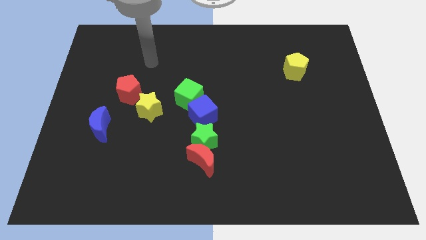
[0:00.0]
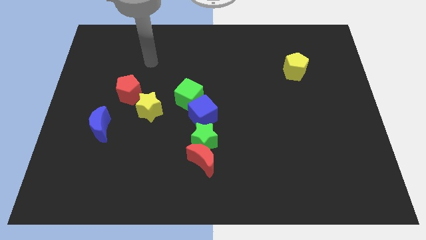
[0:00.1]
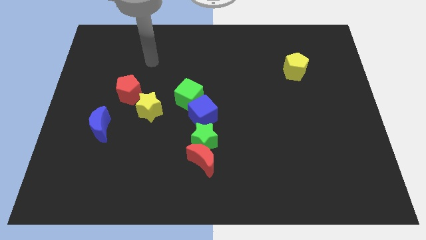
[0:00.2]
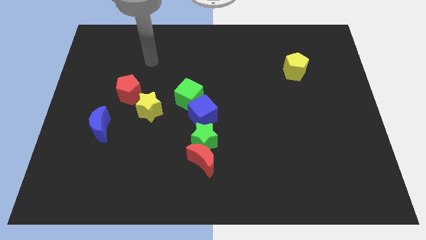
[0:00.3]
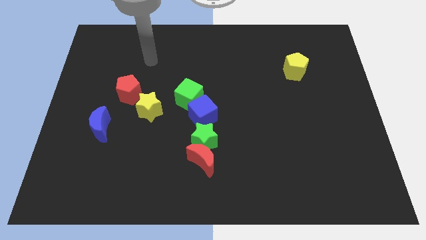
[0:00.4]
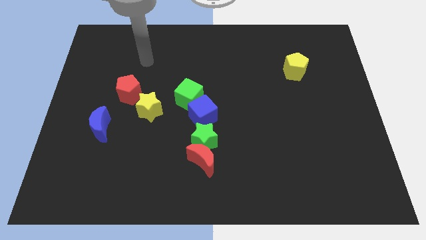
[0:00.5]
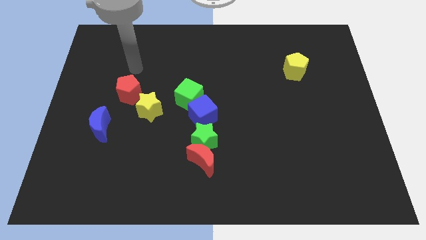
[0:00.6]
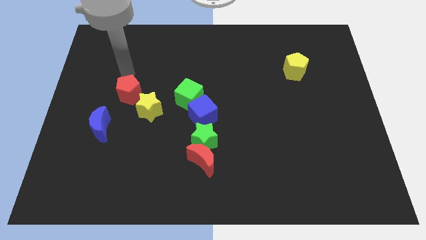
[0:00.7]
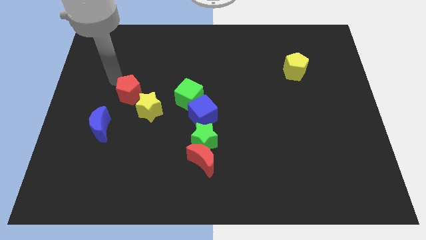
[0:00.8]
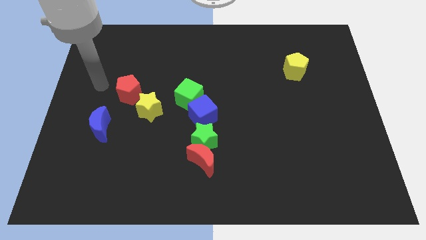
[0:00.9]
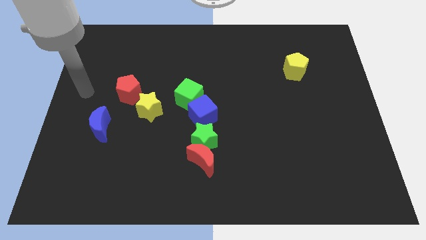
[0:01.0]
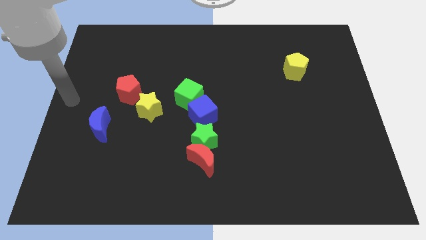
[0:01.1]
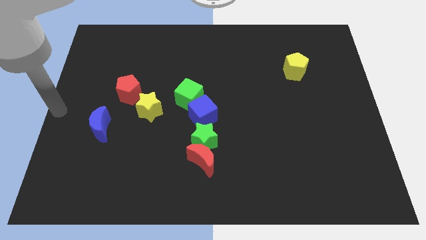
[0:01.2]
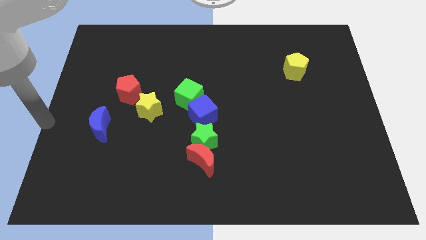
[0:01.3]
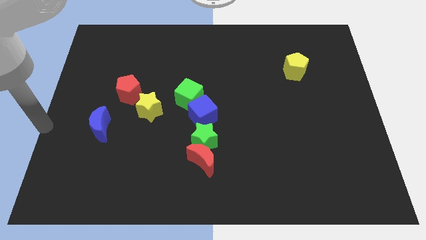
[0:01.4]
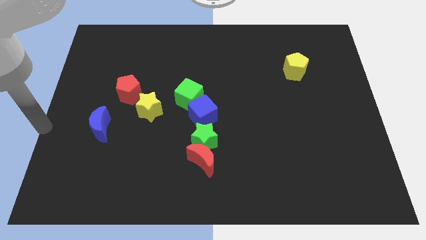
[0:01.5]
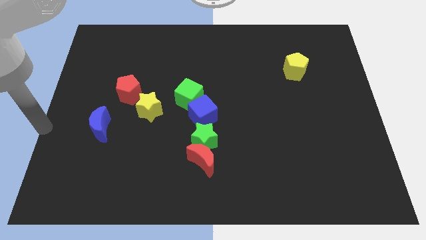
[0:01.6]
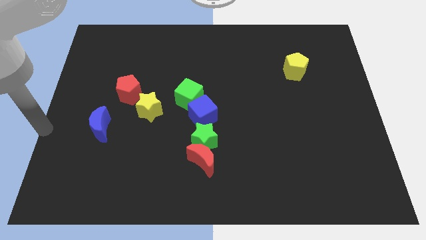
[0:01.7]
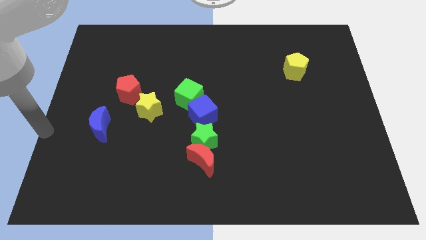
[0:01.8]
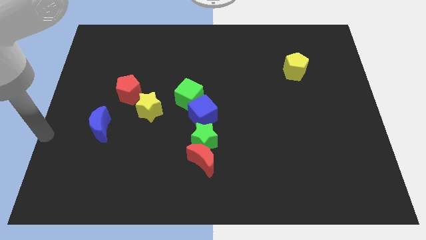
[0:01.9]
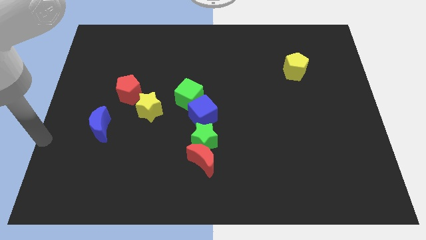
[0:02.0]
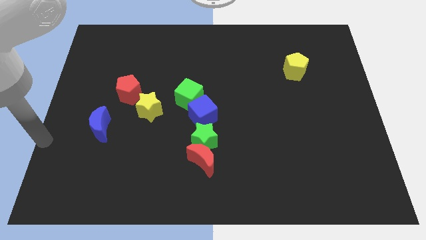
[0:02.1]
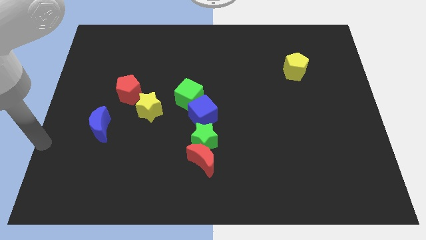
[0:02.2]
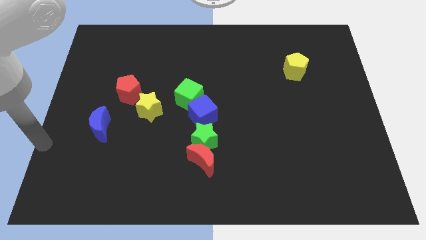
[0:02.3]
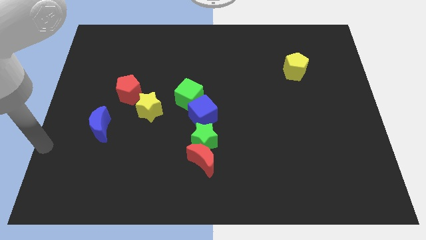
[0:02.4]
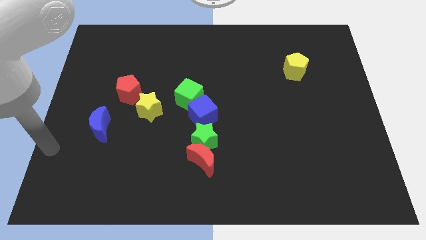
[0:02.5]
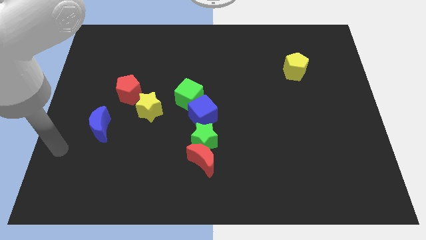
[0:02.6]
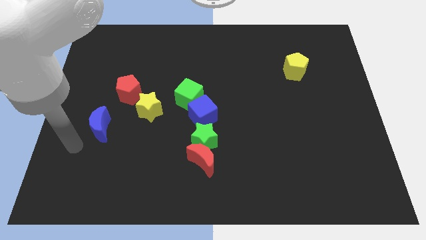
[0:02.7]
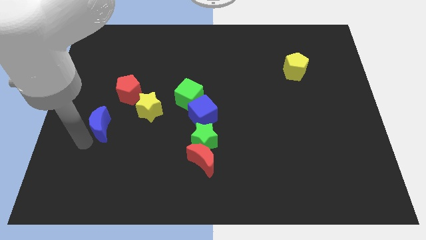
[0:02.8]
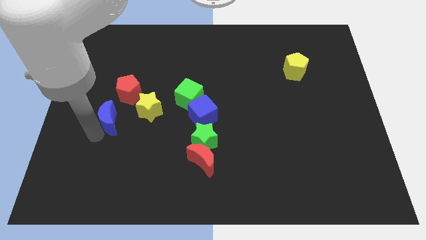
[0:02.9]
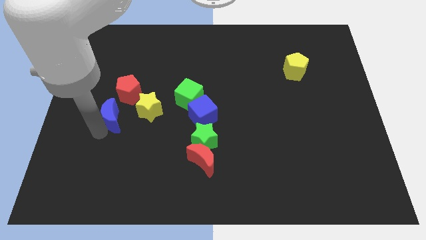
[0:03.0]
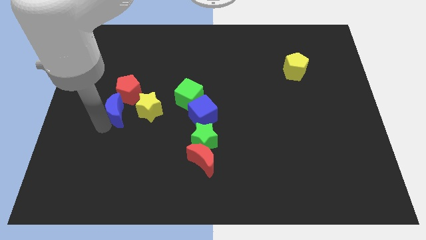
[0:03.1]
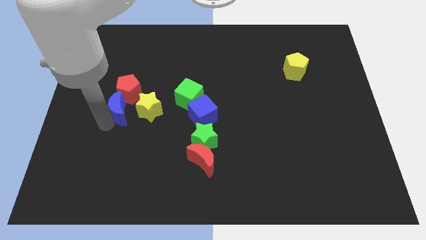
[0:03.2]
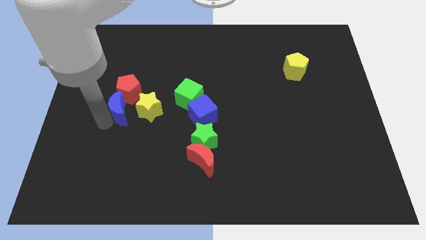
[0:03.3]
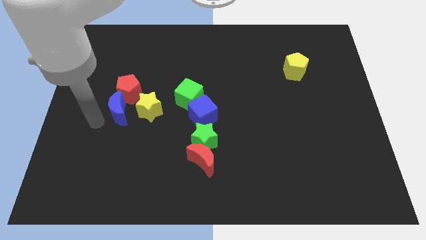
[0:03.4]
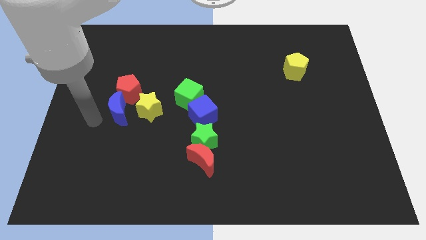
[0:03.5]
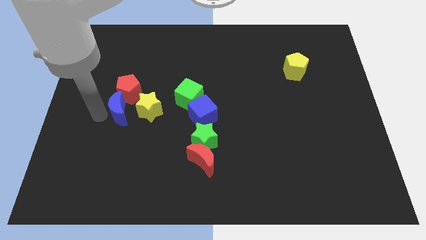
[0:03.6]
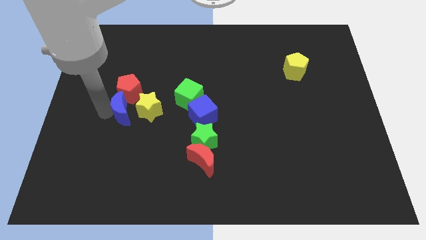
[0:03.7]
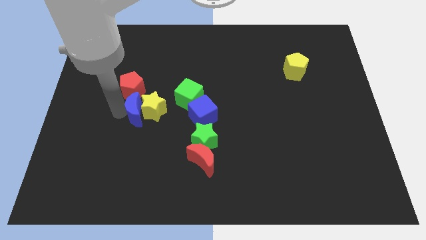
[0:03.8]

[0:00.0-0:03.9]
move the blue crescent to the yellow star

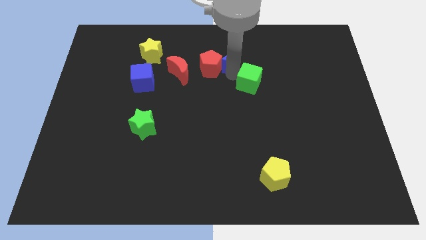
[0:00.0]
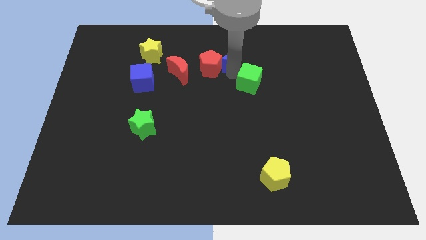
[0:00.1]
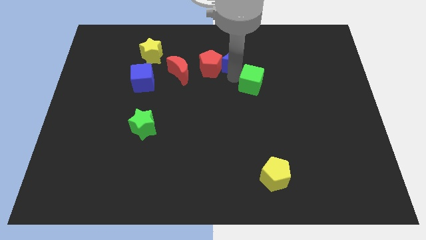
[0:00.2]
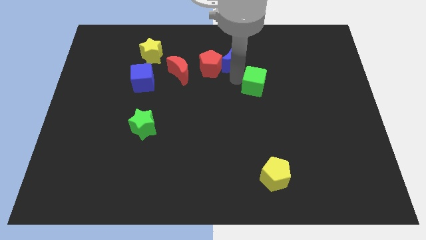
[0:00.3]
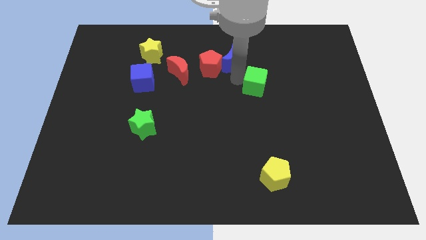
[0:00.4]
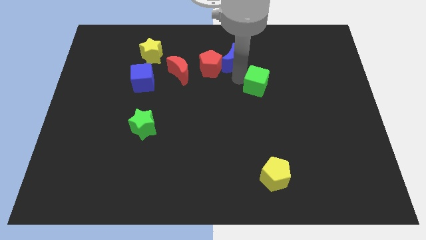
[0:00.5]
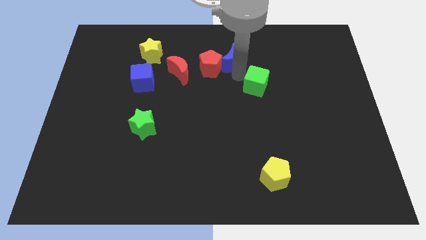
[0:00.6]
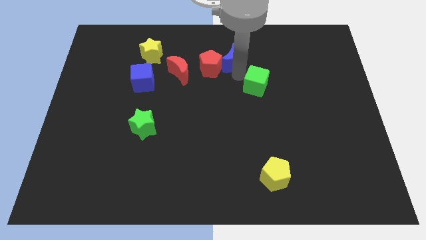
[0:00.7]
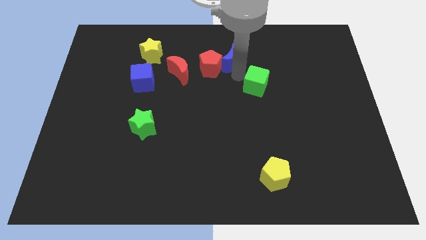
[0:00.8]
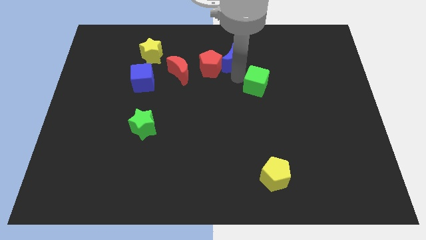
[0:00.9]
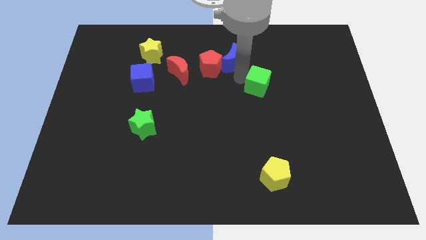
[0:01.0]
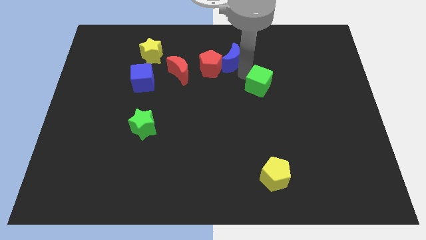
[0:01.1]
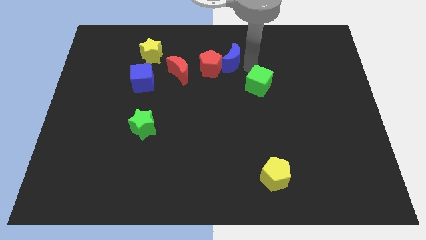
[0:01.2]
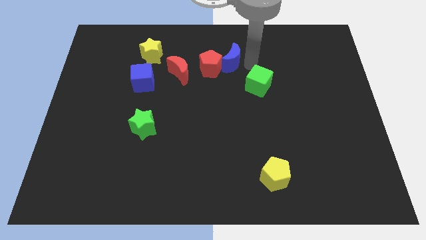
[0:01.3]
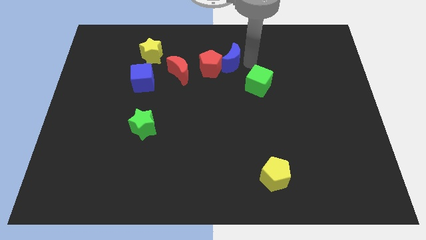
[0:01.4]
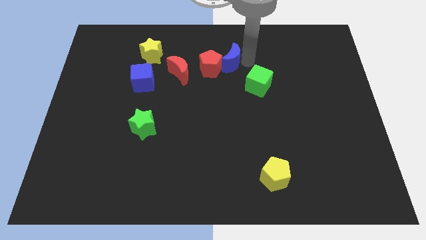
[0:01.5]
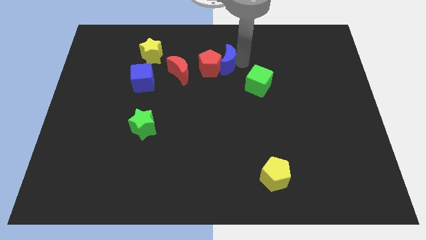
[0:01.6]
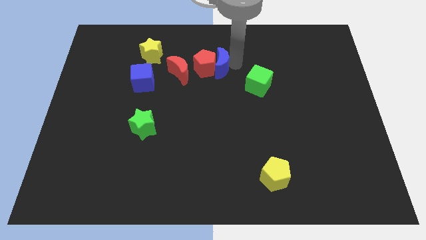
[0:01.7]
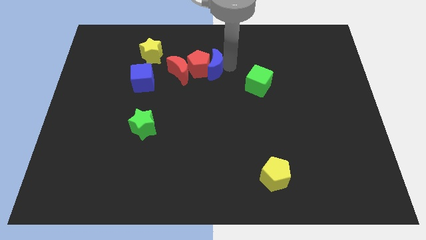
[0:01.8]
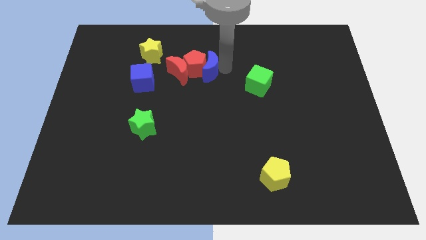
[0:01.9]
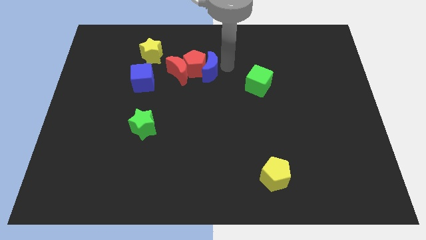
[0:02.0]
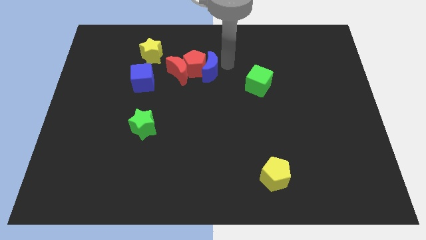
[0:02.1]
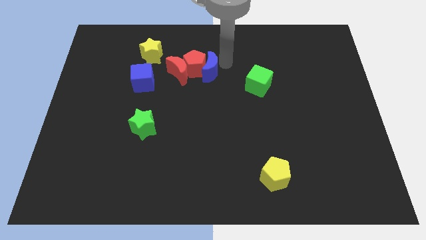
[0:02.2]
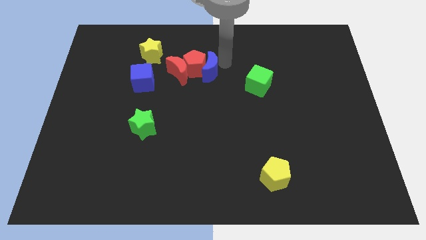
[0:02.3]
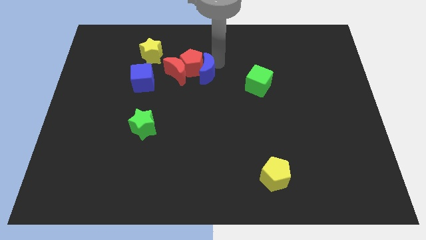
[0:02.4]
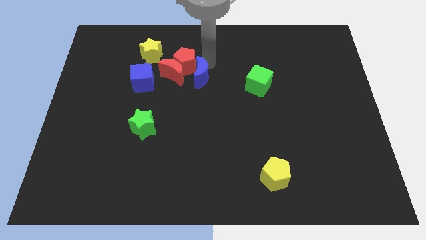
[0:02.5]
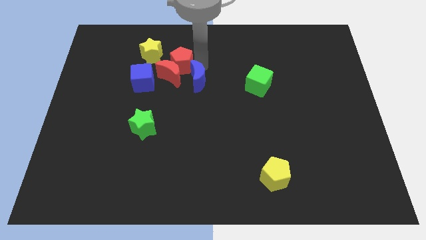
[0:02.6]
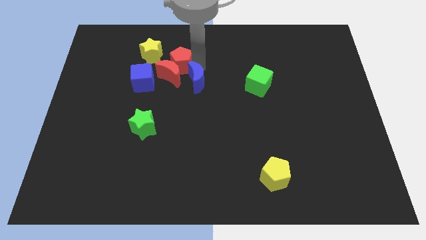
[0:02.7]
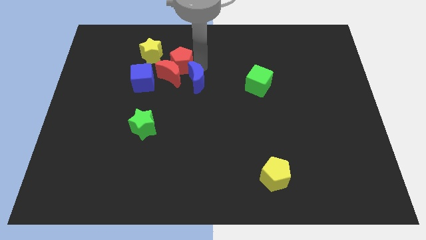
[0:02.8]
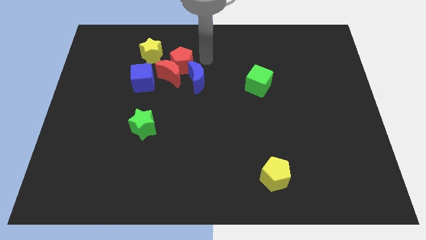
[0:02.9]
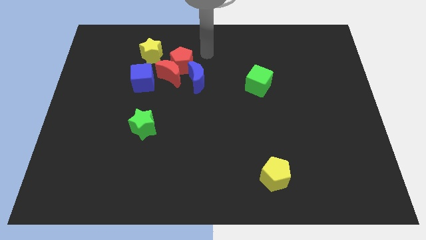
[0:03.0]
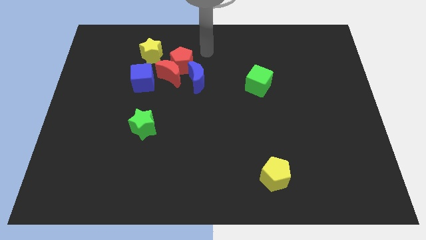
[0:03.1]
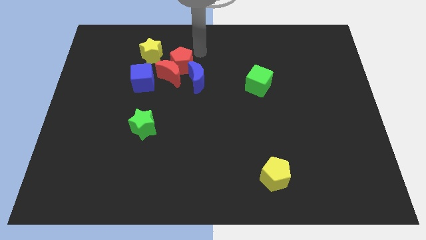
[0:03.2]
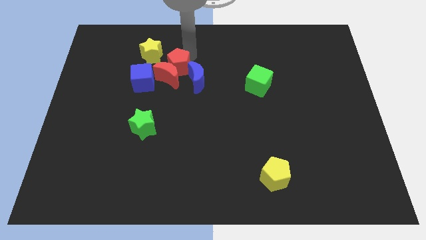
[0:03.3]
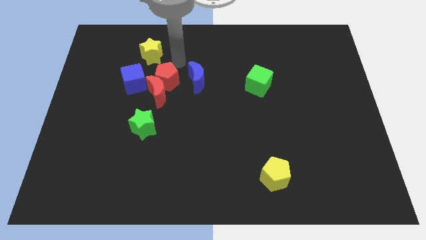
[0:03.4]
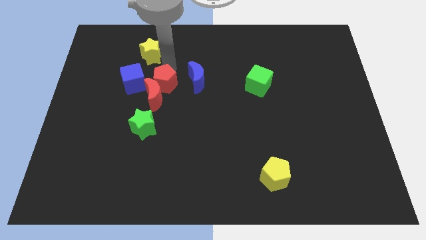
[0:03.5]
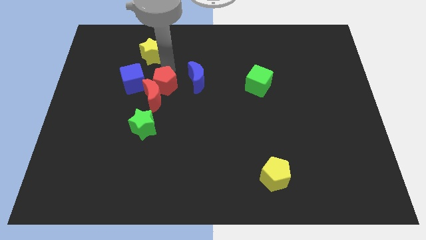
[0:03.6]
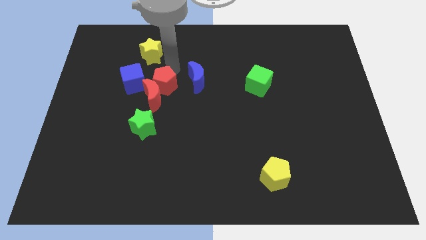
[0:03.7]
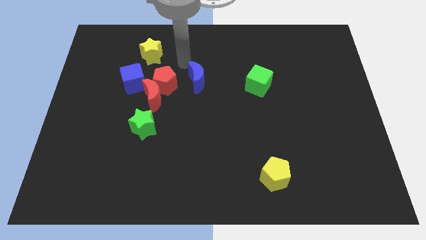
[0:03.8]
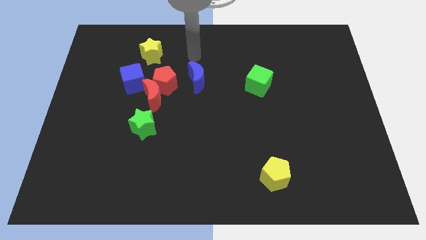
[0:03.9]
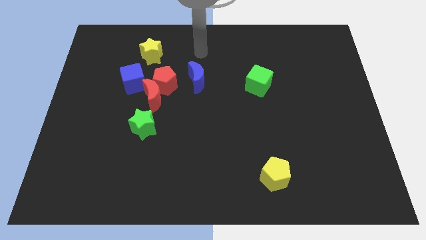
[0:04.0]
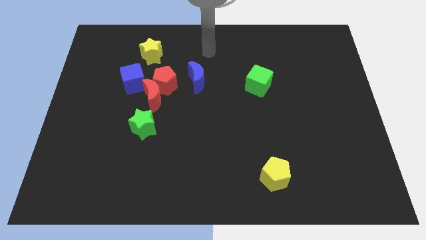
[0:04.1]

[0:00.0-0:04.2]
separate the blue moon and red pentagon

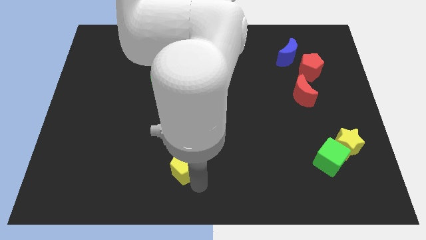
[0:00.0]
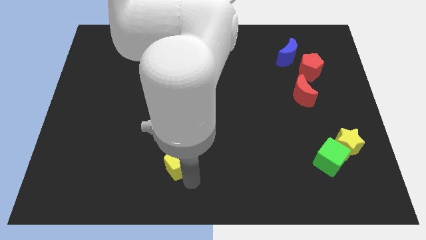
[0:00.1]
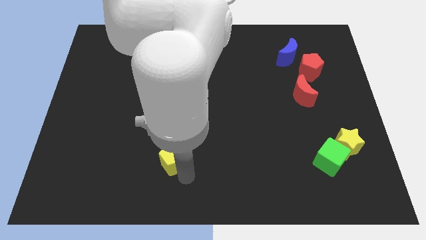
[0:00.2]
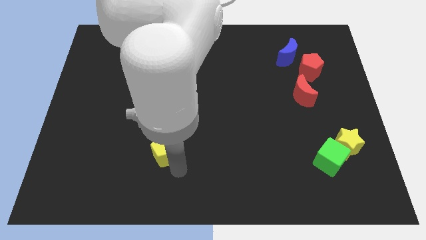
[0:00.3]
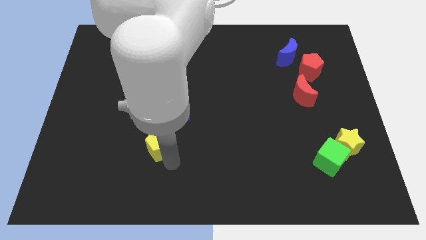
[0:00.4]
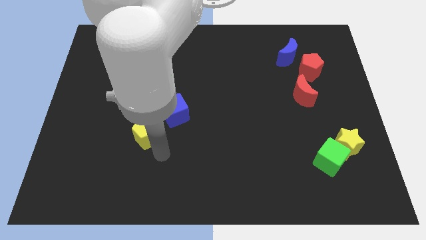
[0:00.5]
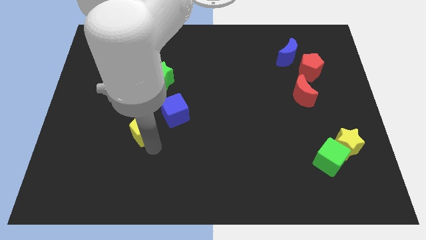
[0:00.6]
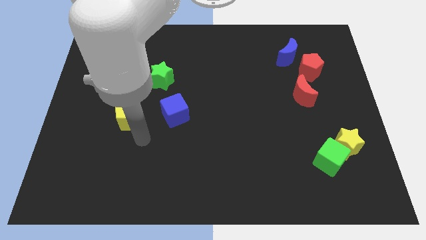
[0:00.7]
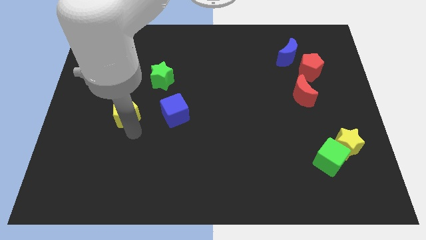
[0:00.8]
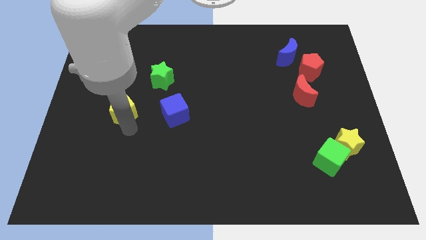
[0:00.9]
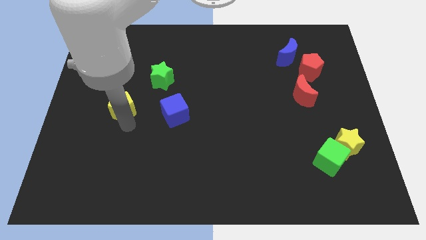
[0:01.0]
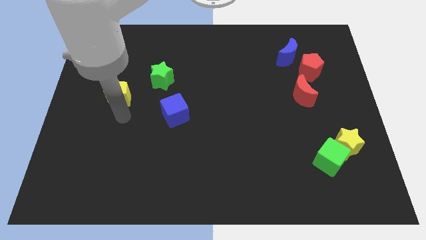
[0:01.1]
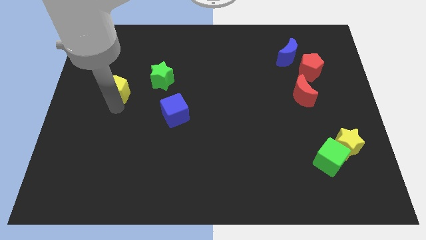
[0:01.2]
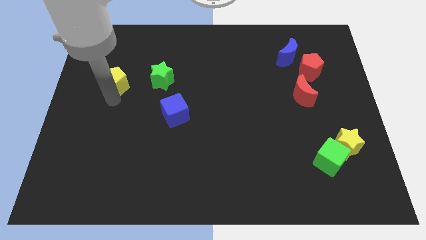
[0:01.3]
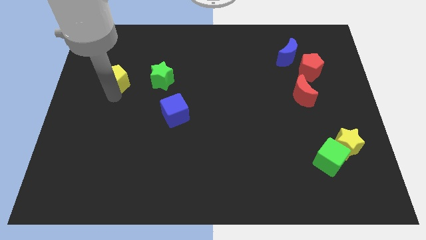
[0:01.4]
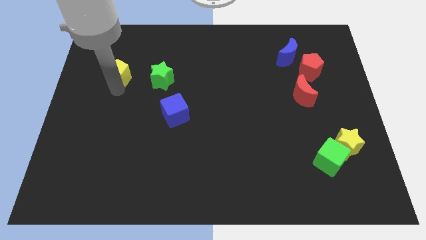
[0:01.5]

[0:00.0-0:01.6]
move yellow pentagon to the left of green star
